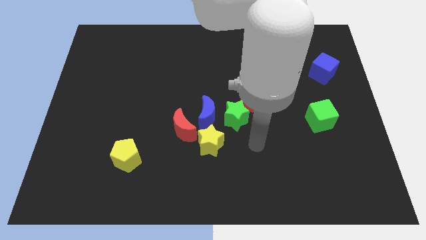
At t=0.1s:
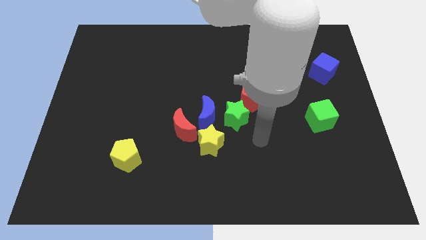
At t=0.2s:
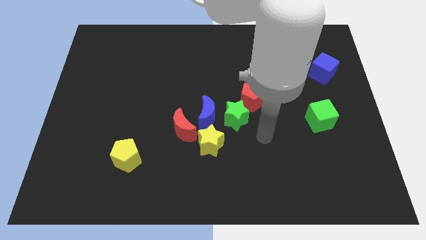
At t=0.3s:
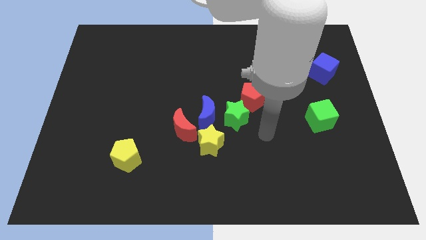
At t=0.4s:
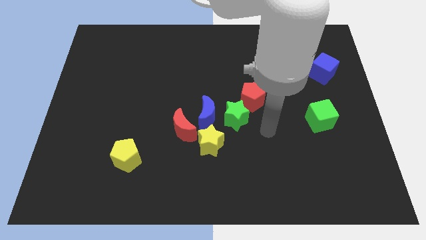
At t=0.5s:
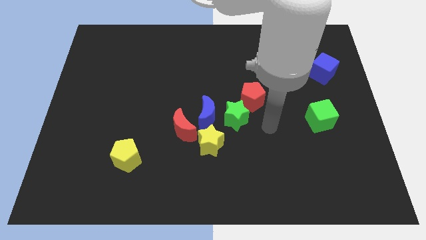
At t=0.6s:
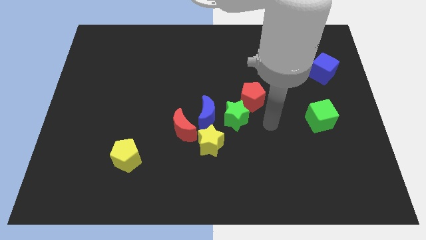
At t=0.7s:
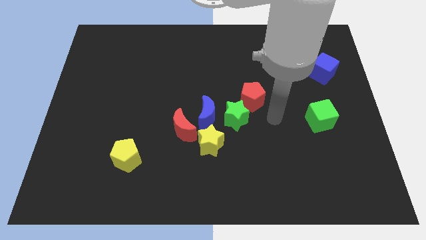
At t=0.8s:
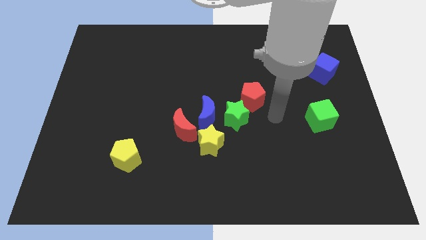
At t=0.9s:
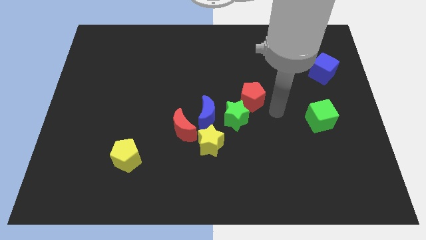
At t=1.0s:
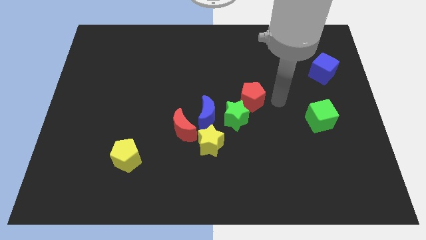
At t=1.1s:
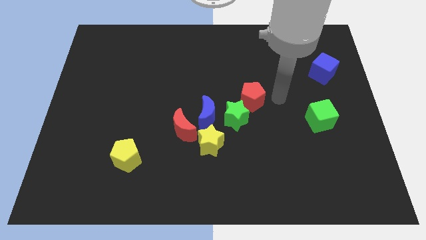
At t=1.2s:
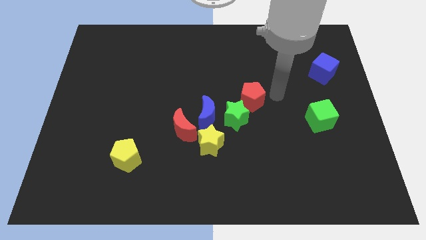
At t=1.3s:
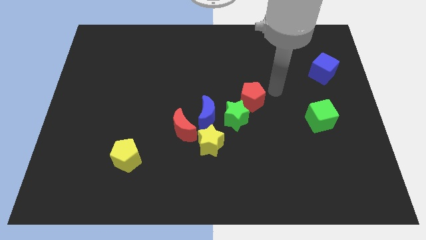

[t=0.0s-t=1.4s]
place the arm at the right side of the red pentagon

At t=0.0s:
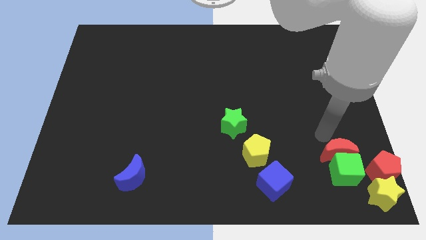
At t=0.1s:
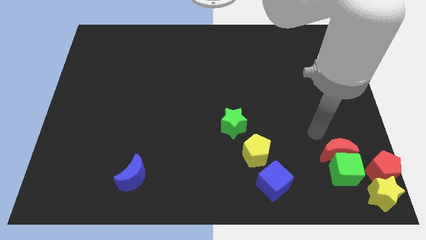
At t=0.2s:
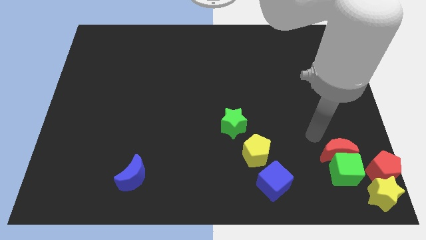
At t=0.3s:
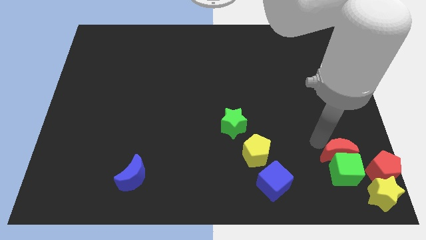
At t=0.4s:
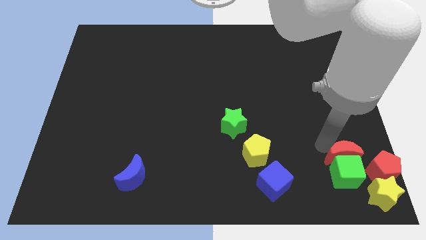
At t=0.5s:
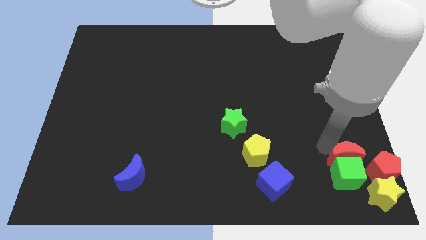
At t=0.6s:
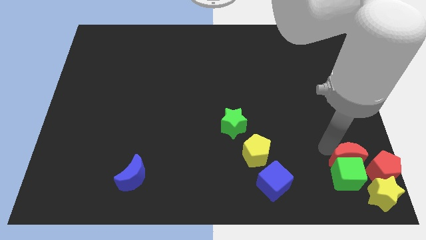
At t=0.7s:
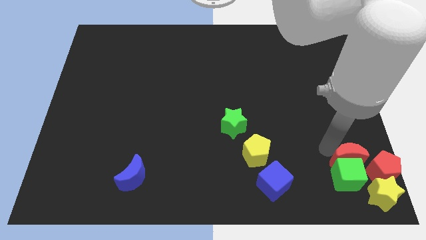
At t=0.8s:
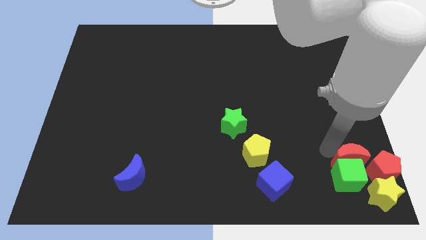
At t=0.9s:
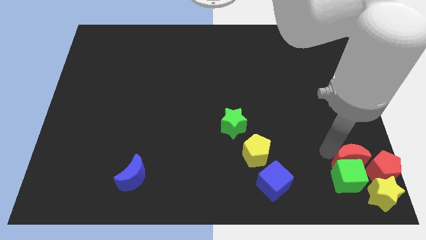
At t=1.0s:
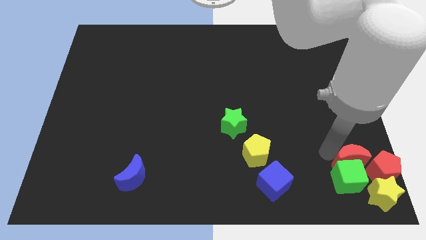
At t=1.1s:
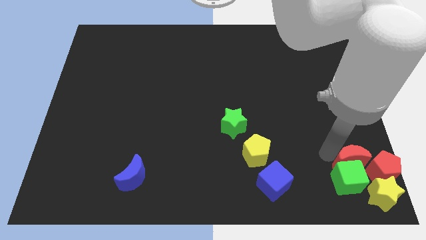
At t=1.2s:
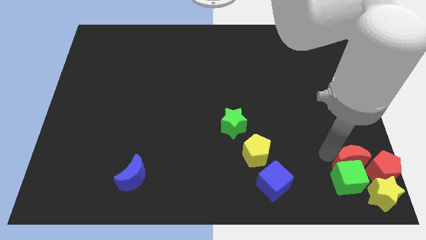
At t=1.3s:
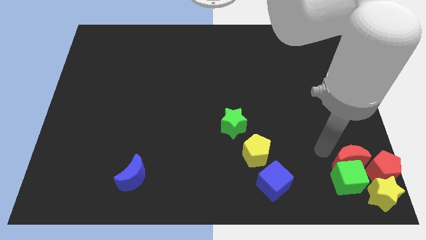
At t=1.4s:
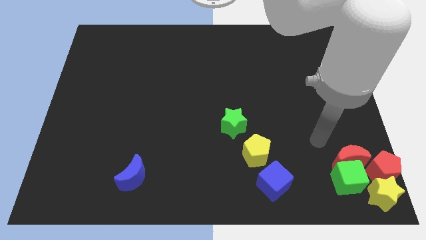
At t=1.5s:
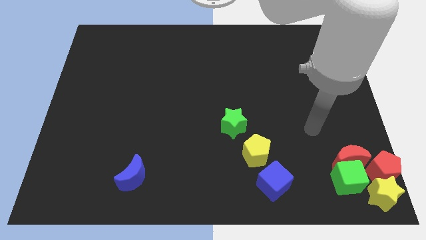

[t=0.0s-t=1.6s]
adjust the green cube and red moon

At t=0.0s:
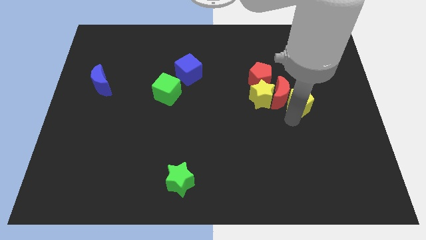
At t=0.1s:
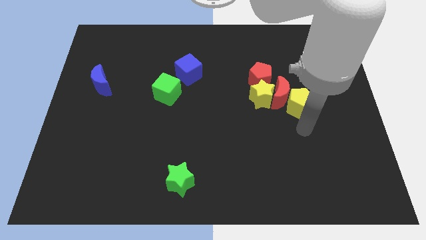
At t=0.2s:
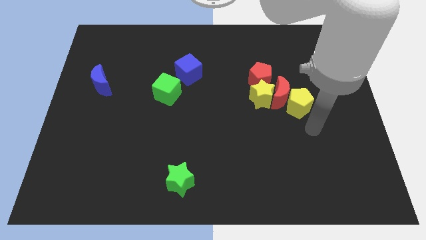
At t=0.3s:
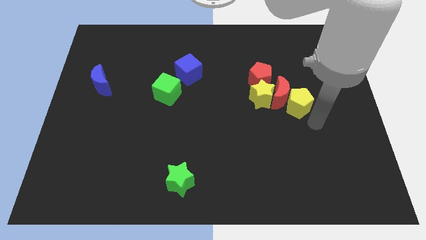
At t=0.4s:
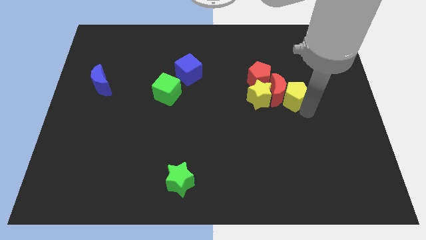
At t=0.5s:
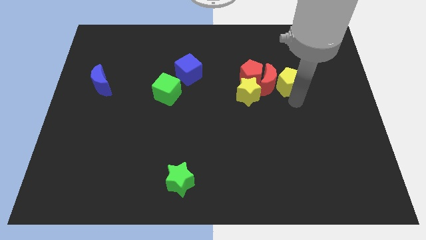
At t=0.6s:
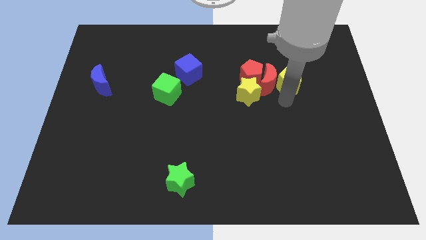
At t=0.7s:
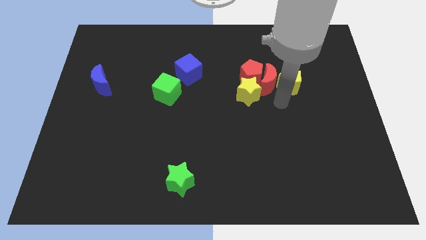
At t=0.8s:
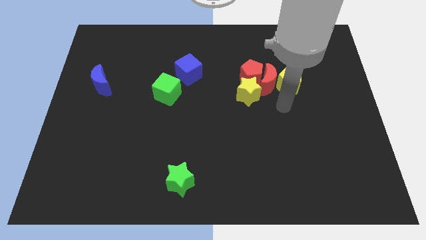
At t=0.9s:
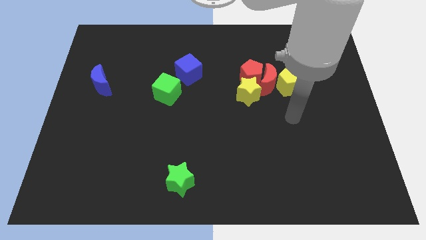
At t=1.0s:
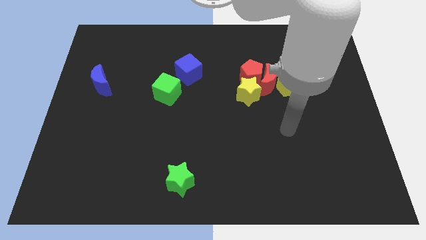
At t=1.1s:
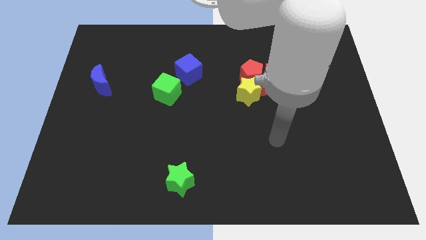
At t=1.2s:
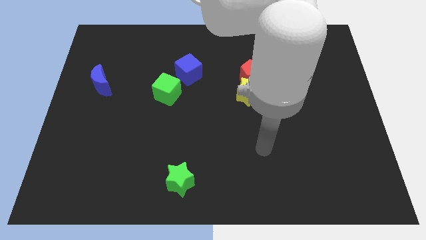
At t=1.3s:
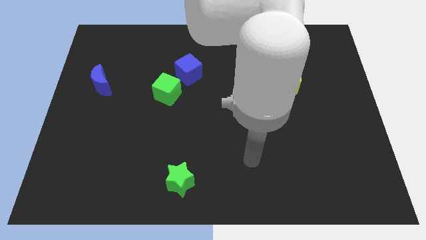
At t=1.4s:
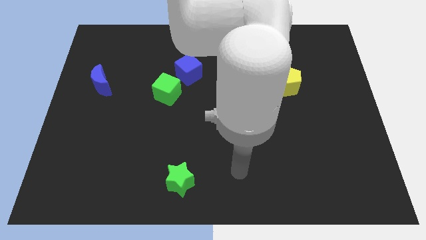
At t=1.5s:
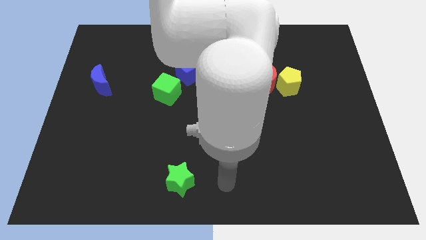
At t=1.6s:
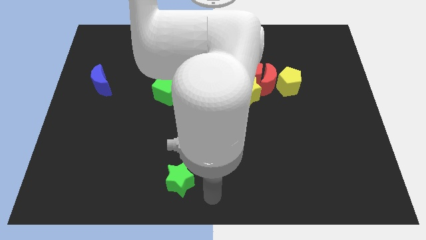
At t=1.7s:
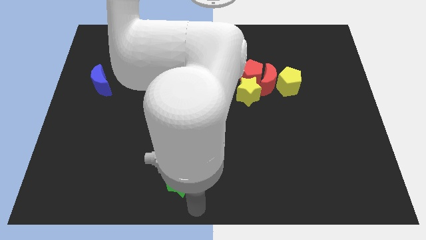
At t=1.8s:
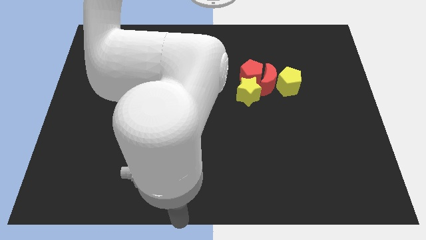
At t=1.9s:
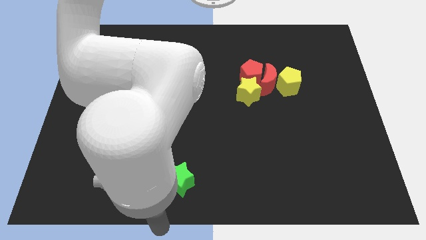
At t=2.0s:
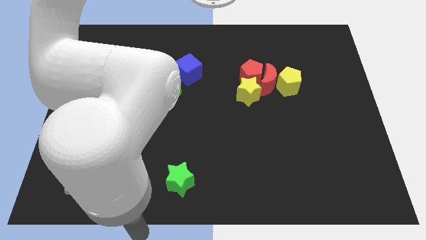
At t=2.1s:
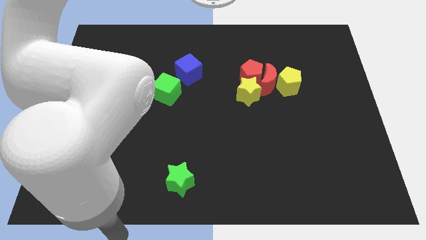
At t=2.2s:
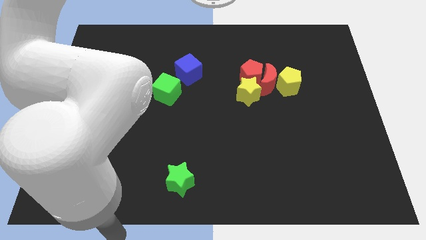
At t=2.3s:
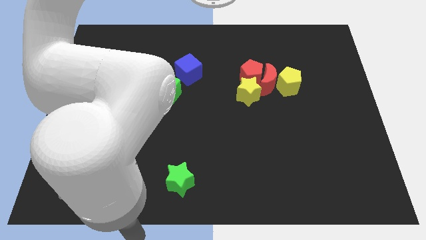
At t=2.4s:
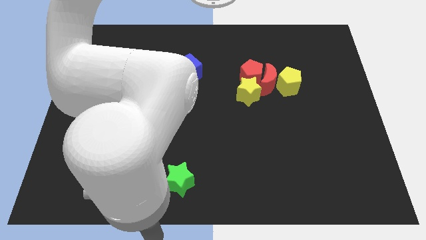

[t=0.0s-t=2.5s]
push the yellow pentagon into the red moon and move away

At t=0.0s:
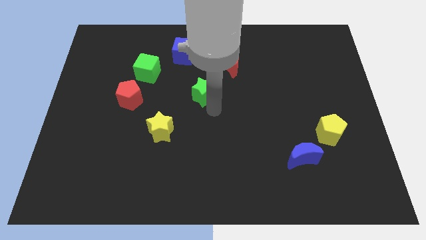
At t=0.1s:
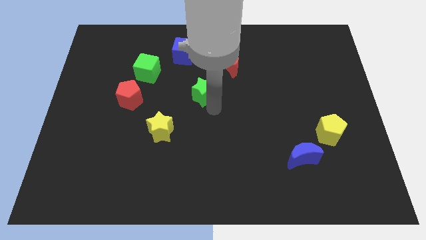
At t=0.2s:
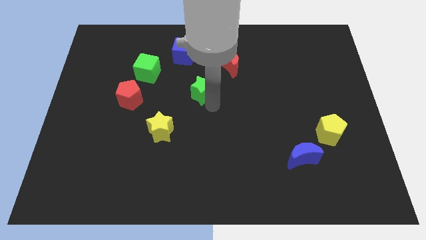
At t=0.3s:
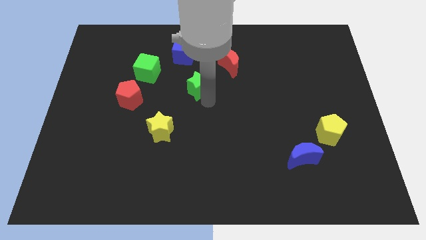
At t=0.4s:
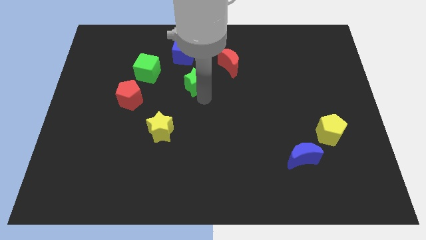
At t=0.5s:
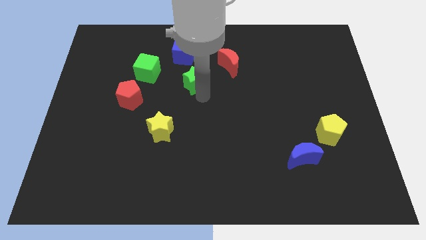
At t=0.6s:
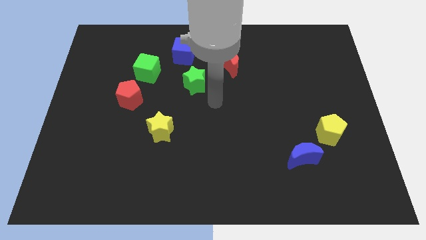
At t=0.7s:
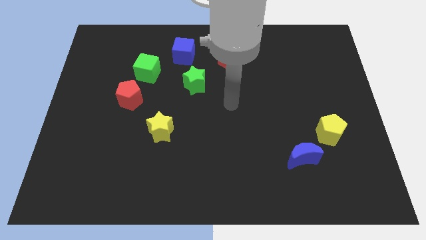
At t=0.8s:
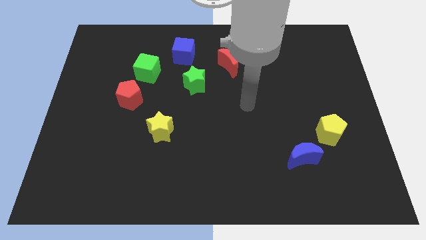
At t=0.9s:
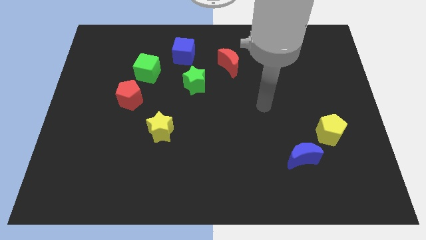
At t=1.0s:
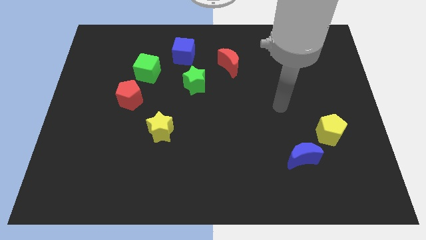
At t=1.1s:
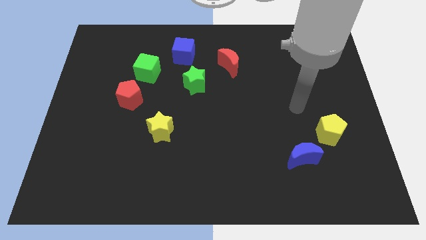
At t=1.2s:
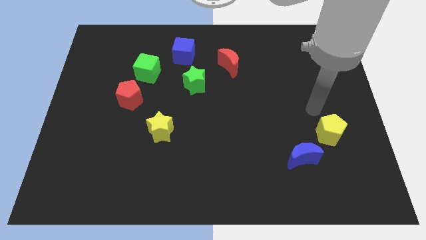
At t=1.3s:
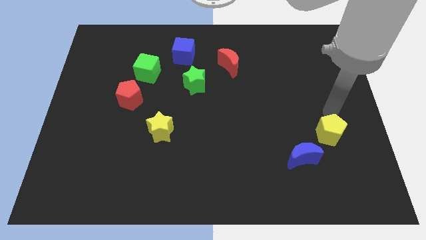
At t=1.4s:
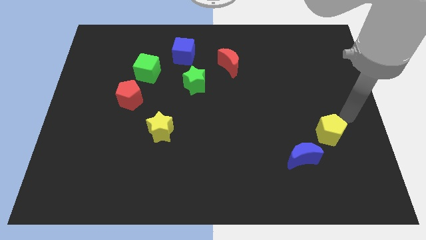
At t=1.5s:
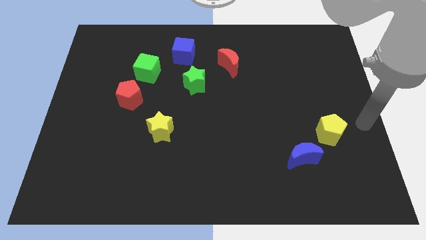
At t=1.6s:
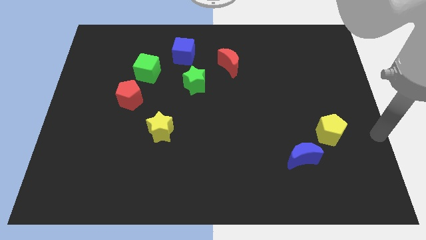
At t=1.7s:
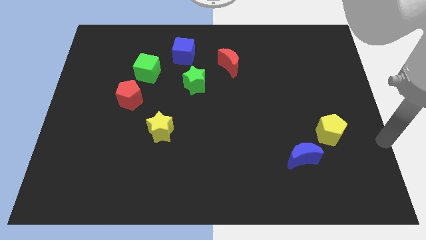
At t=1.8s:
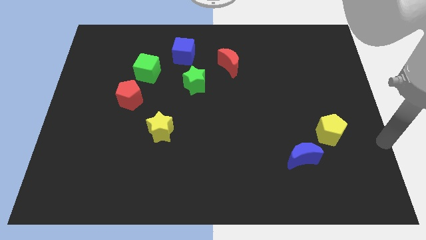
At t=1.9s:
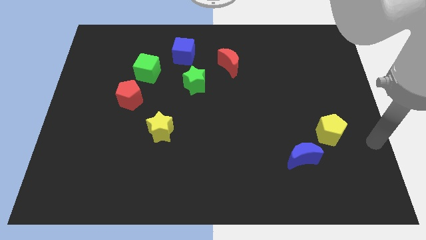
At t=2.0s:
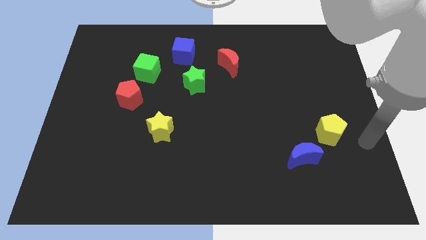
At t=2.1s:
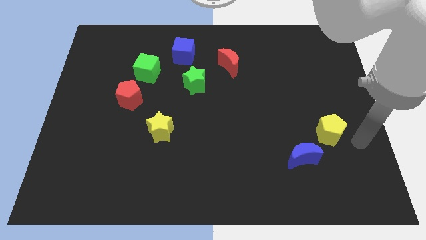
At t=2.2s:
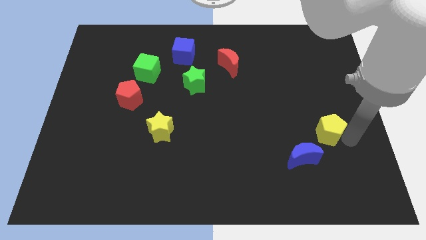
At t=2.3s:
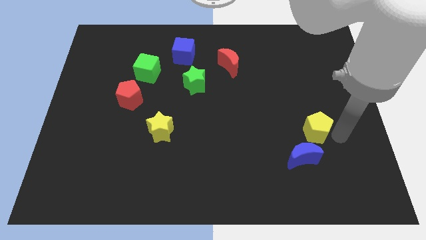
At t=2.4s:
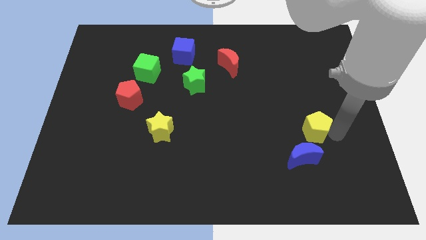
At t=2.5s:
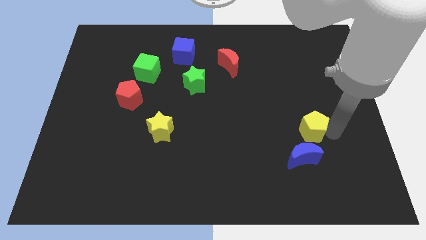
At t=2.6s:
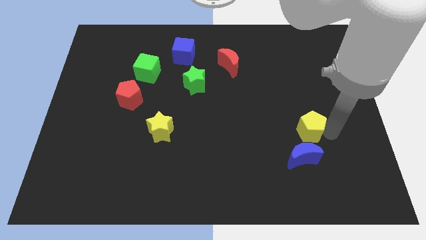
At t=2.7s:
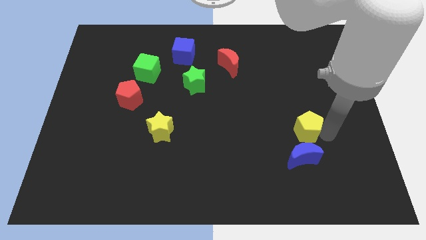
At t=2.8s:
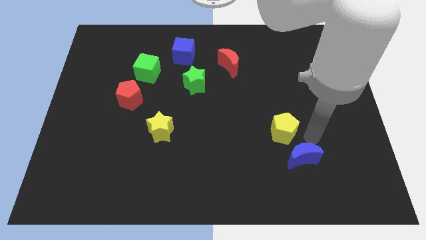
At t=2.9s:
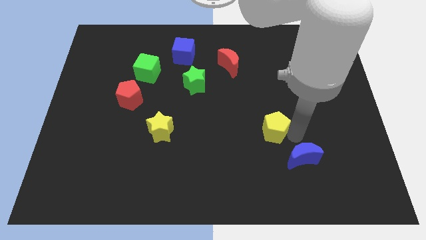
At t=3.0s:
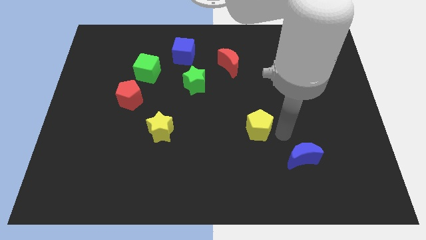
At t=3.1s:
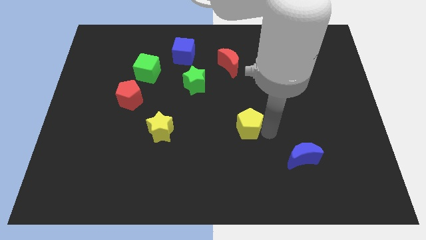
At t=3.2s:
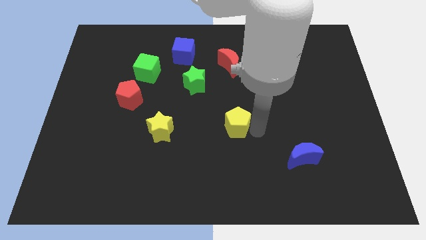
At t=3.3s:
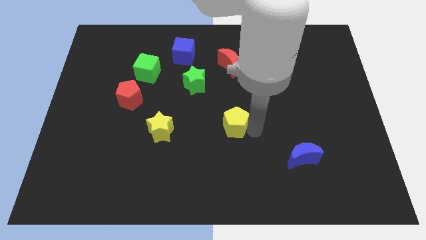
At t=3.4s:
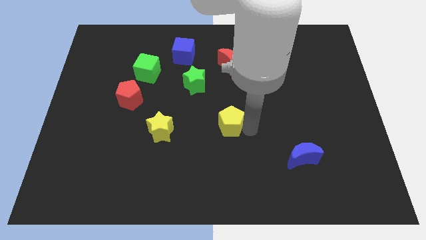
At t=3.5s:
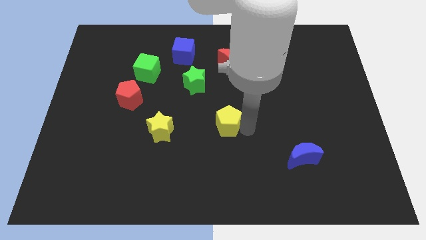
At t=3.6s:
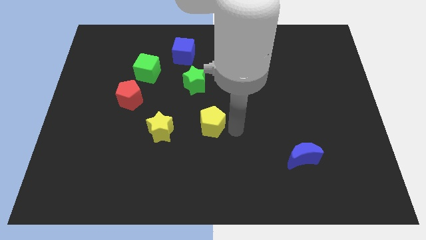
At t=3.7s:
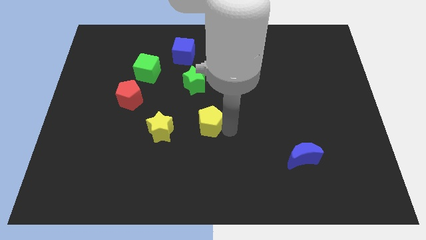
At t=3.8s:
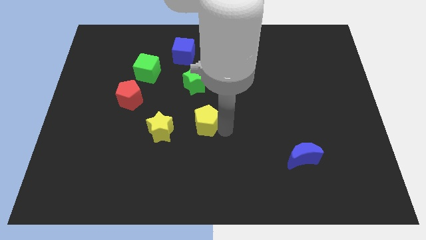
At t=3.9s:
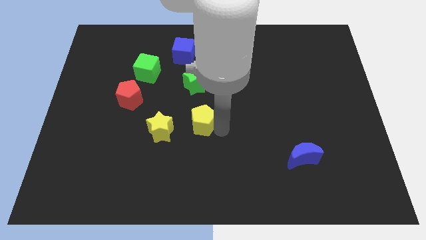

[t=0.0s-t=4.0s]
adjust the green star down to the blue cube
